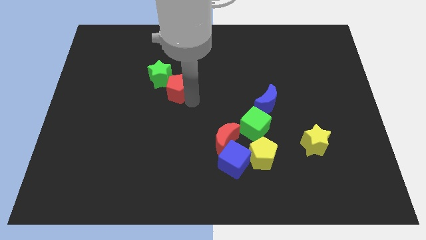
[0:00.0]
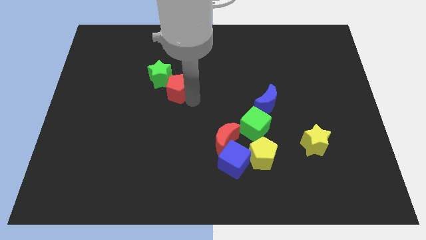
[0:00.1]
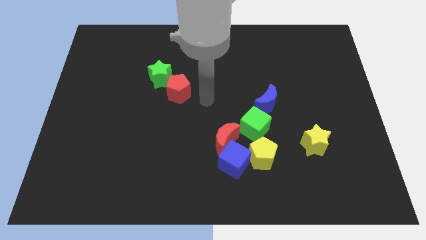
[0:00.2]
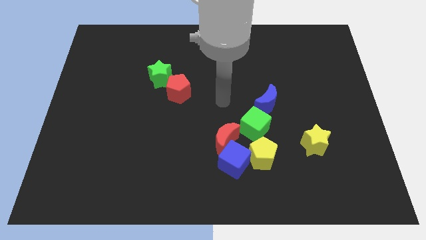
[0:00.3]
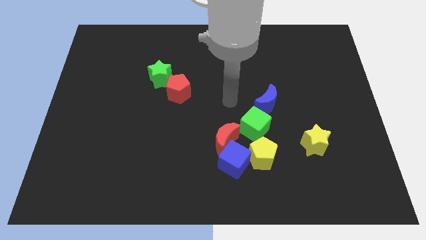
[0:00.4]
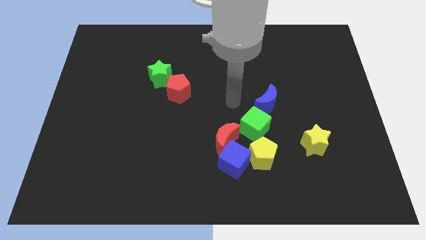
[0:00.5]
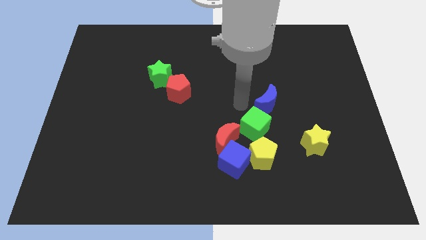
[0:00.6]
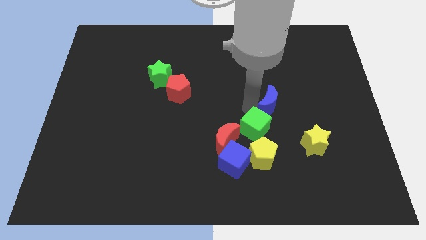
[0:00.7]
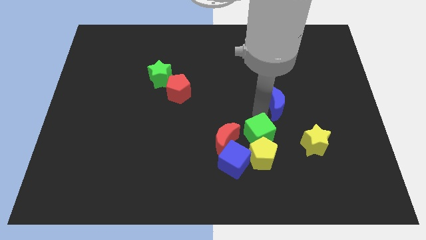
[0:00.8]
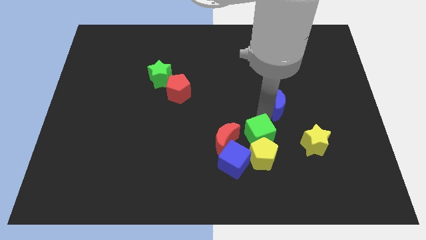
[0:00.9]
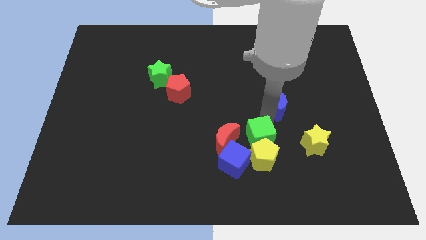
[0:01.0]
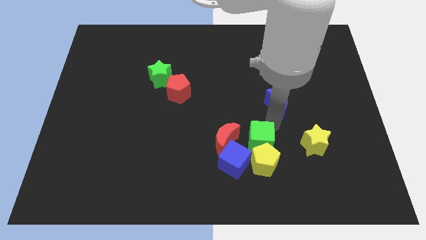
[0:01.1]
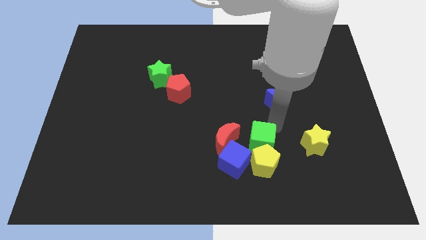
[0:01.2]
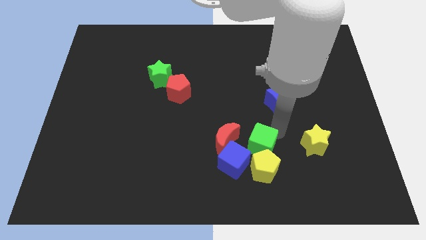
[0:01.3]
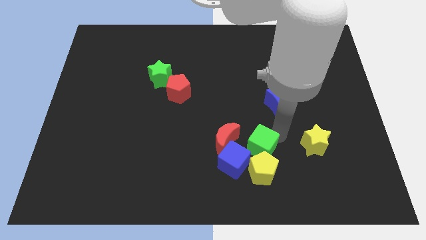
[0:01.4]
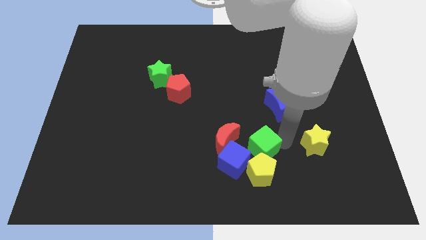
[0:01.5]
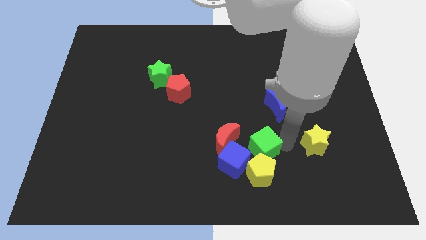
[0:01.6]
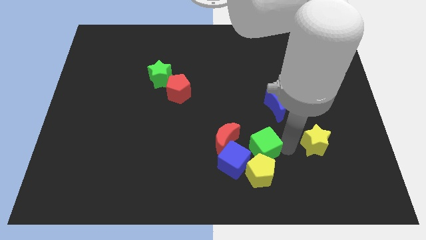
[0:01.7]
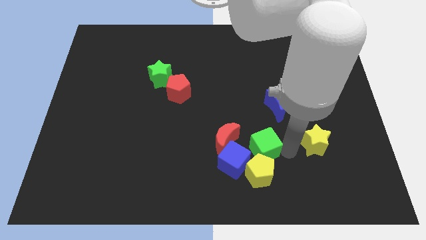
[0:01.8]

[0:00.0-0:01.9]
push the green cube slightly to the bottom

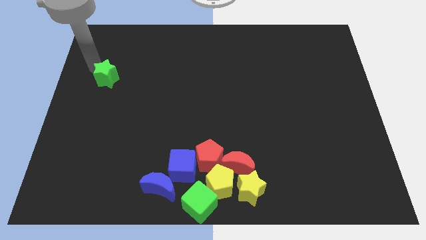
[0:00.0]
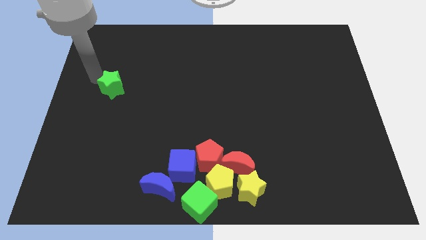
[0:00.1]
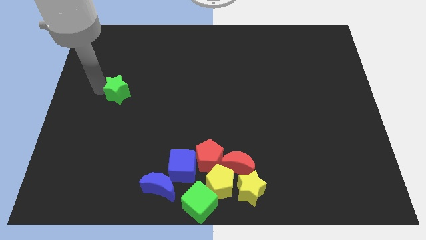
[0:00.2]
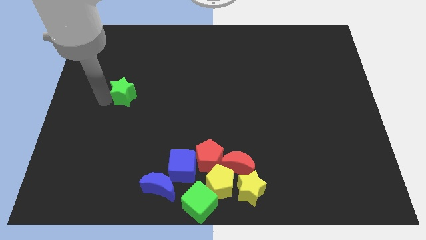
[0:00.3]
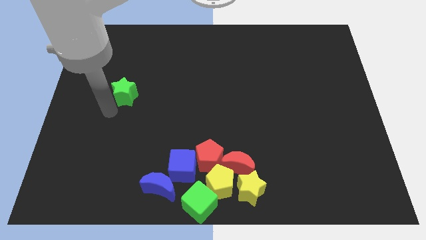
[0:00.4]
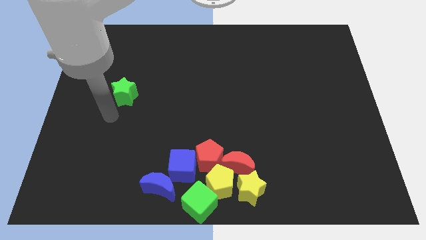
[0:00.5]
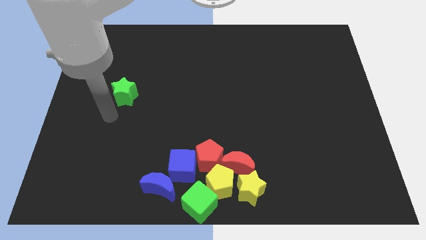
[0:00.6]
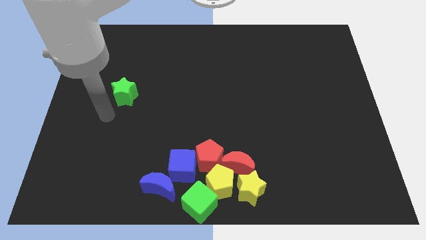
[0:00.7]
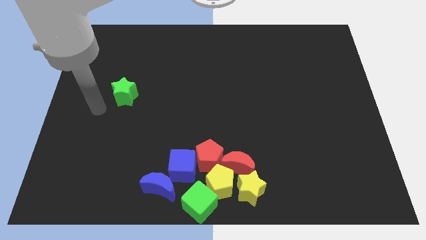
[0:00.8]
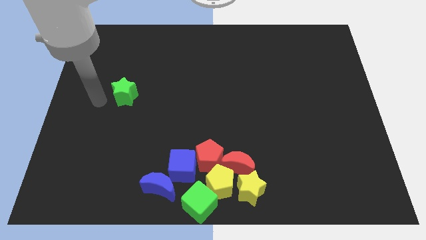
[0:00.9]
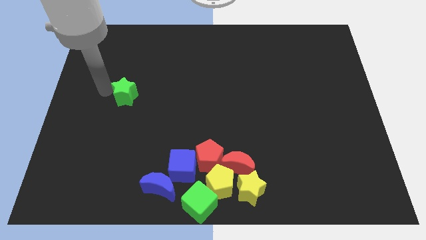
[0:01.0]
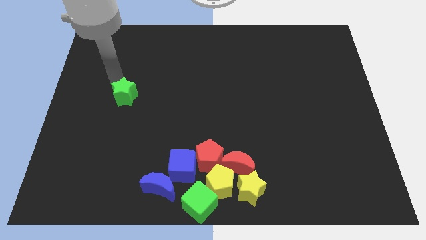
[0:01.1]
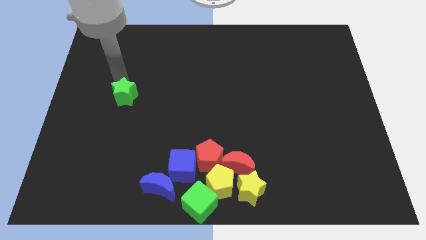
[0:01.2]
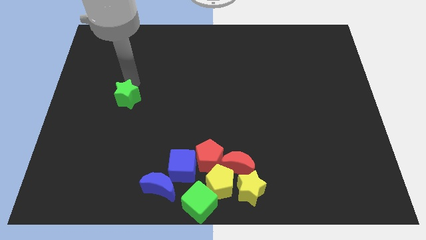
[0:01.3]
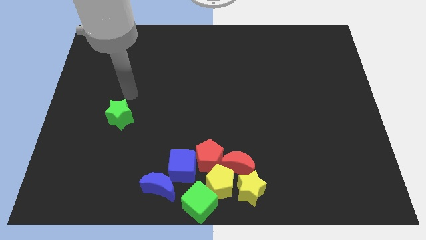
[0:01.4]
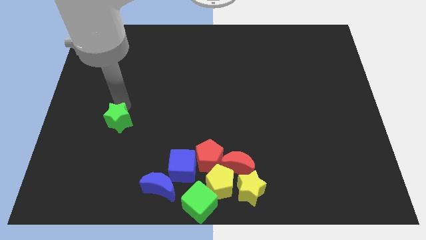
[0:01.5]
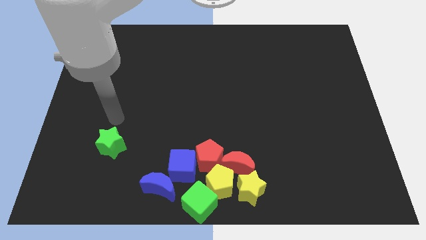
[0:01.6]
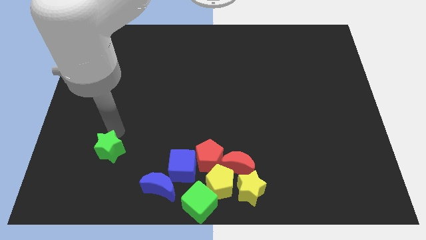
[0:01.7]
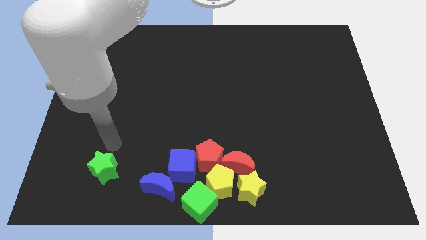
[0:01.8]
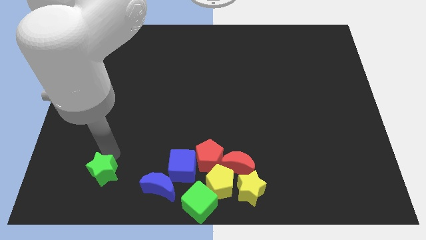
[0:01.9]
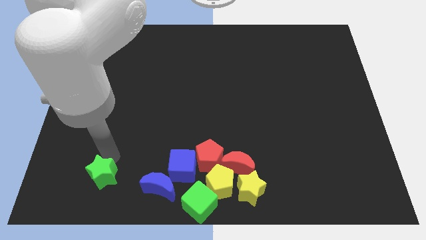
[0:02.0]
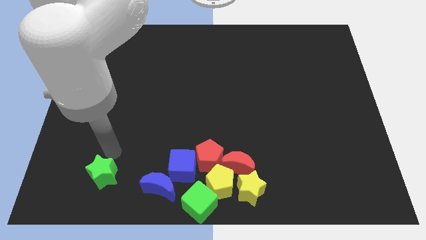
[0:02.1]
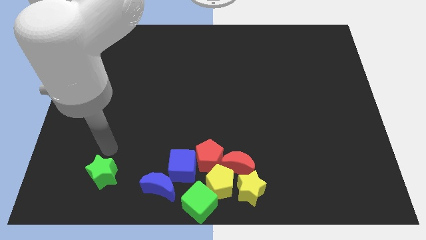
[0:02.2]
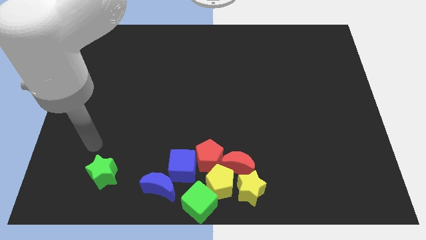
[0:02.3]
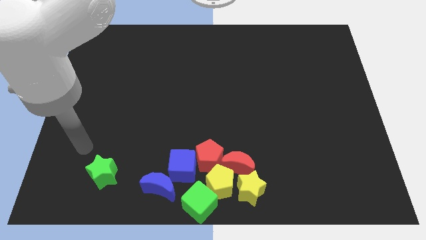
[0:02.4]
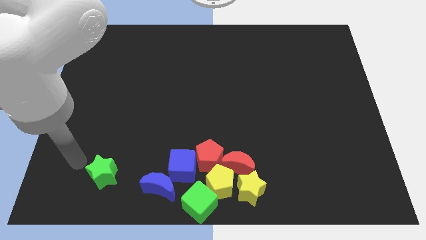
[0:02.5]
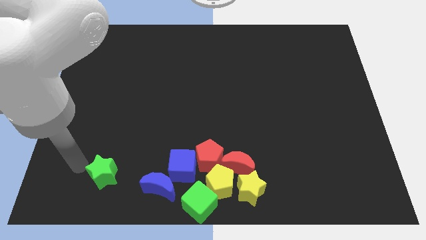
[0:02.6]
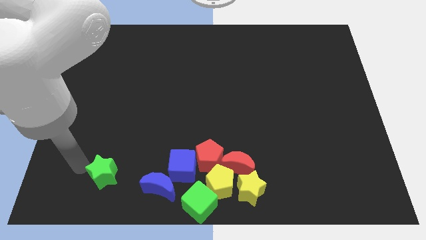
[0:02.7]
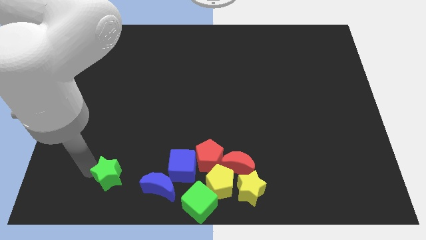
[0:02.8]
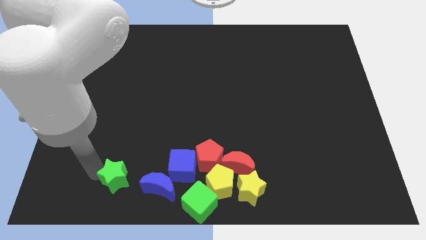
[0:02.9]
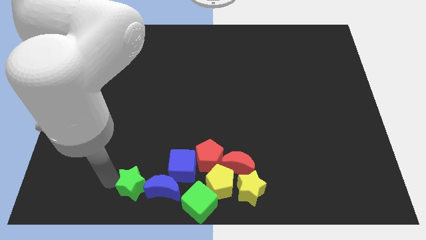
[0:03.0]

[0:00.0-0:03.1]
move the green star on the left of the blue crescent

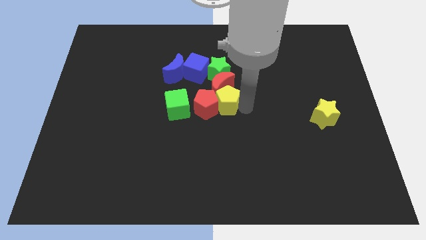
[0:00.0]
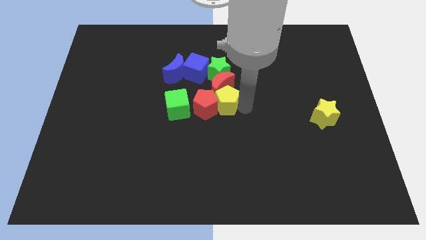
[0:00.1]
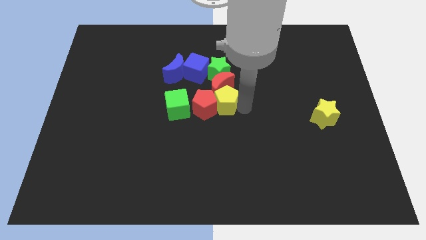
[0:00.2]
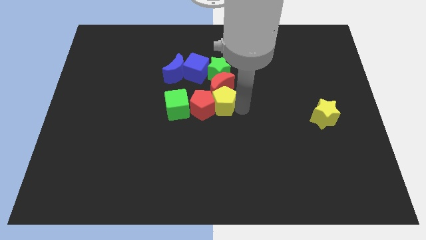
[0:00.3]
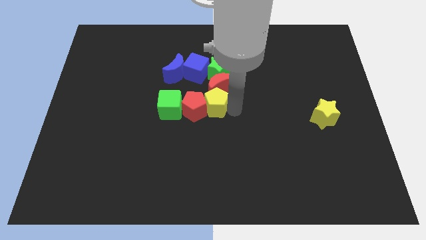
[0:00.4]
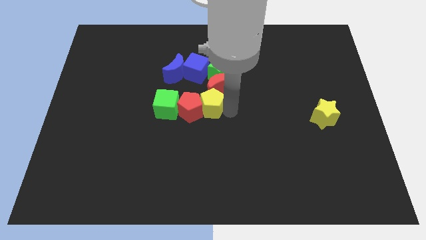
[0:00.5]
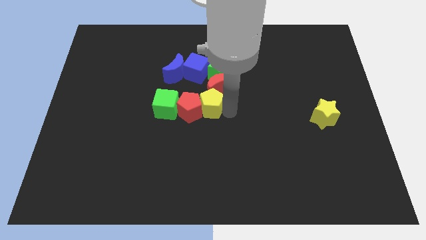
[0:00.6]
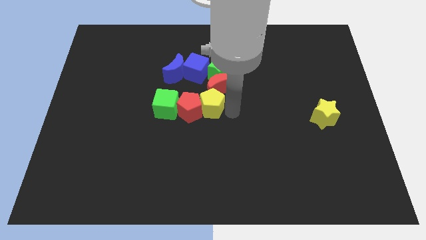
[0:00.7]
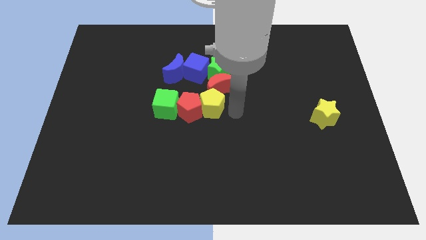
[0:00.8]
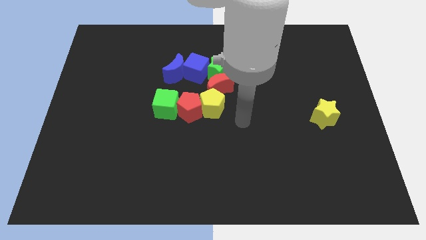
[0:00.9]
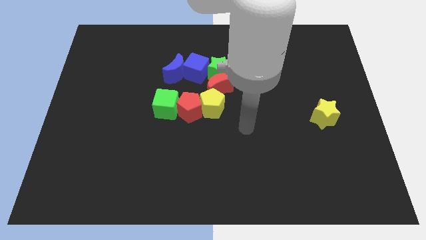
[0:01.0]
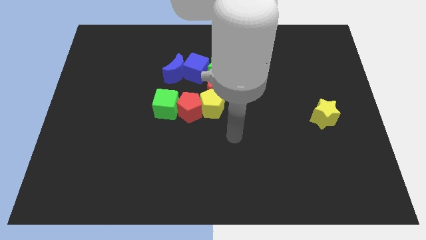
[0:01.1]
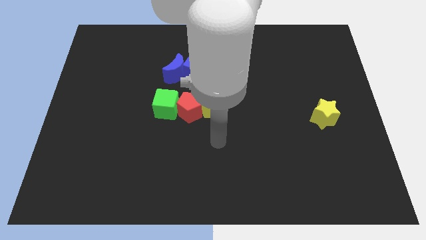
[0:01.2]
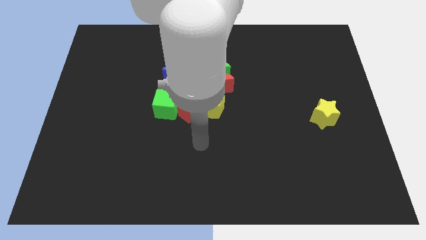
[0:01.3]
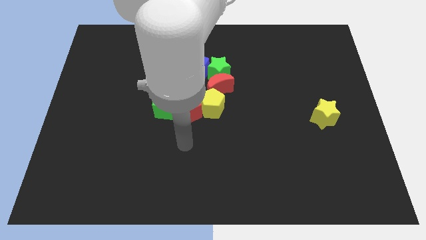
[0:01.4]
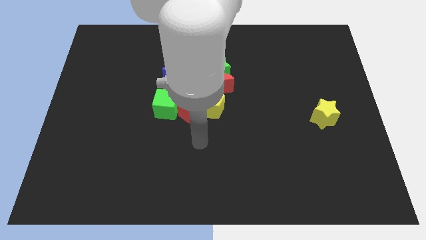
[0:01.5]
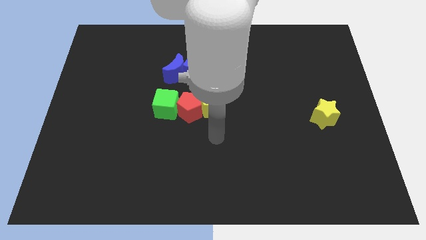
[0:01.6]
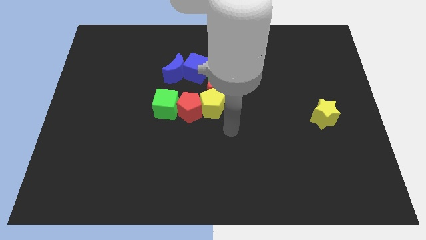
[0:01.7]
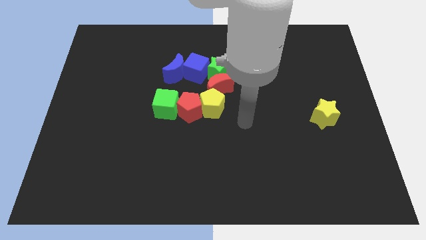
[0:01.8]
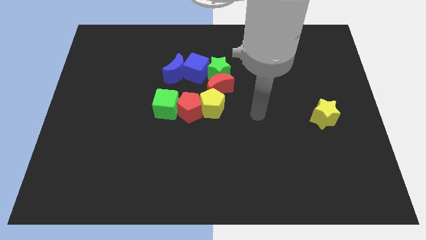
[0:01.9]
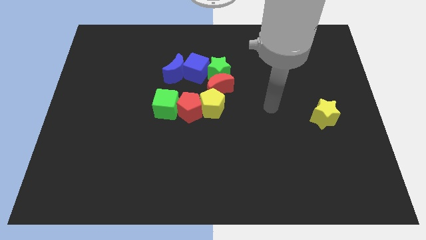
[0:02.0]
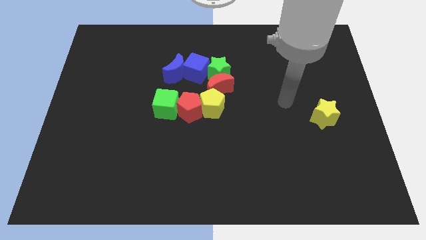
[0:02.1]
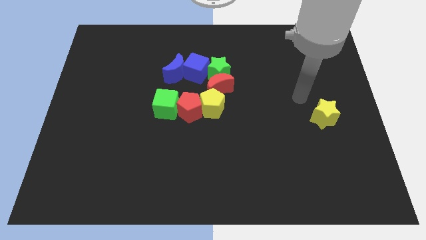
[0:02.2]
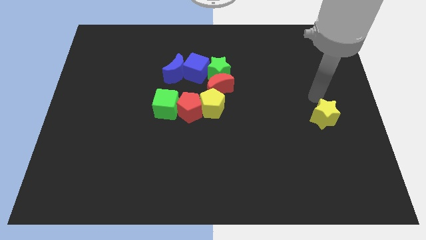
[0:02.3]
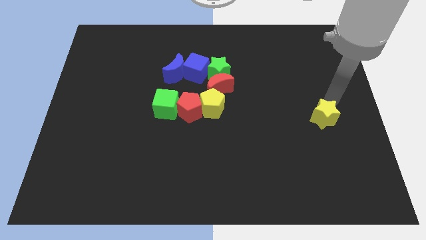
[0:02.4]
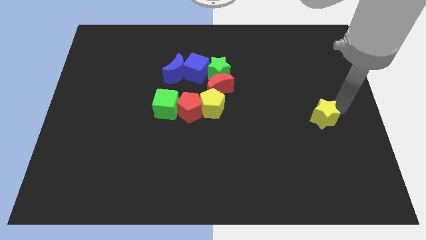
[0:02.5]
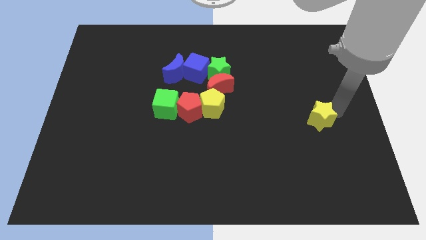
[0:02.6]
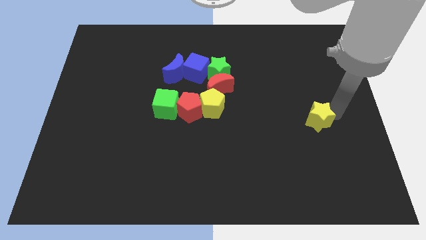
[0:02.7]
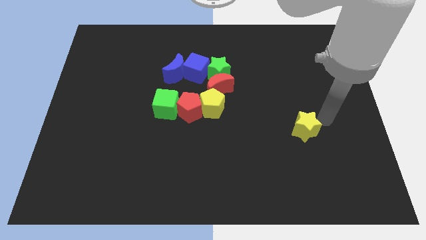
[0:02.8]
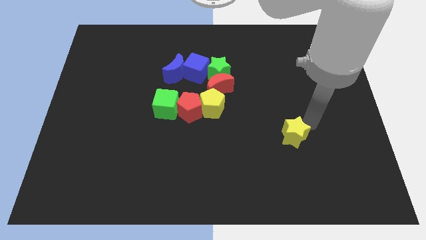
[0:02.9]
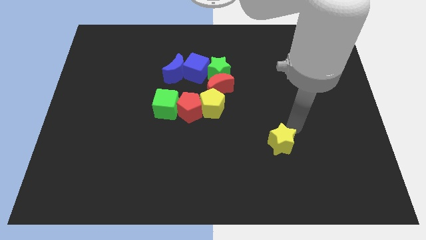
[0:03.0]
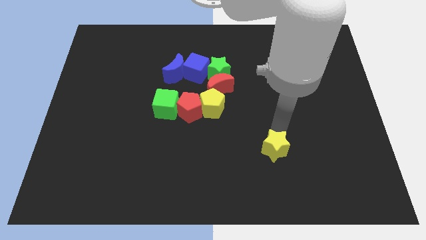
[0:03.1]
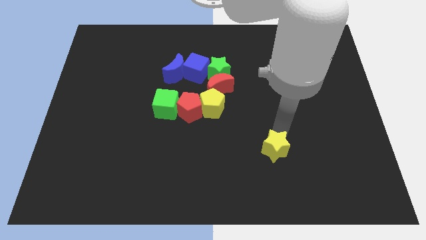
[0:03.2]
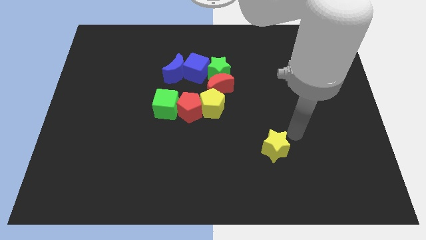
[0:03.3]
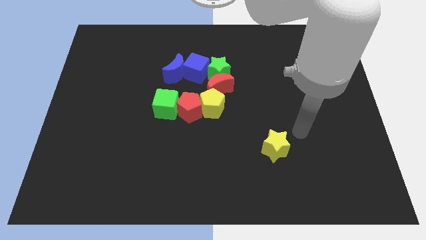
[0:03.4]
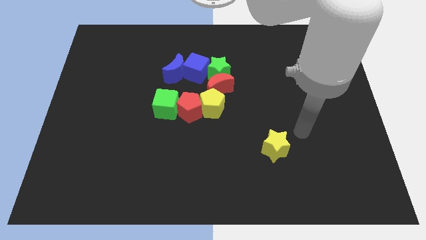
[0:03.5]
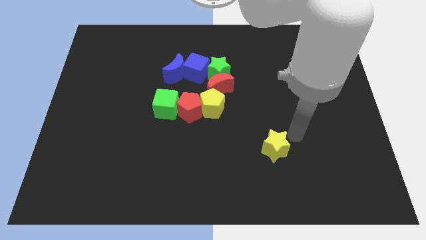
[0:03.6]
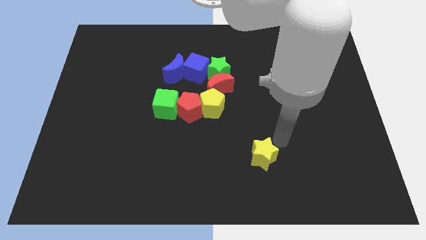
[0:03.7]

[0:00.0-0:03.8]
push the yellow star to the bottom side

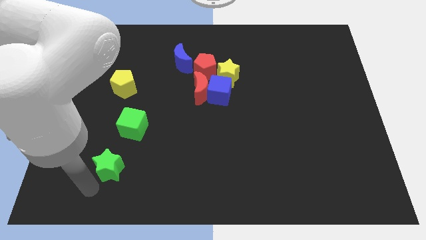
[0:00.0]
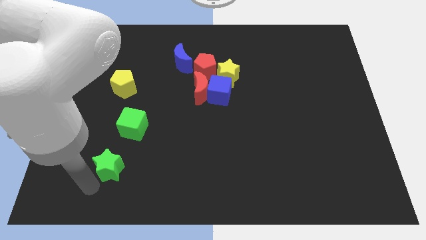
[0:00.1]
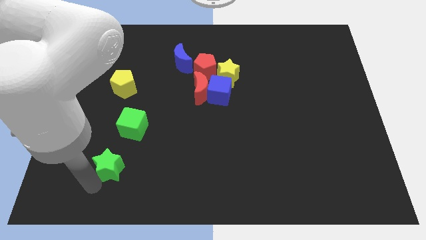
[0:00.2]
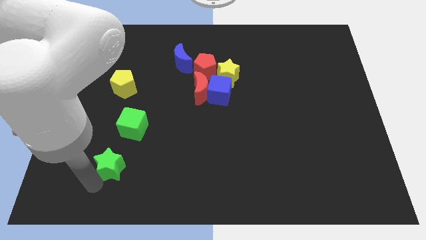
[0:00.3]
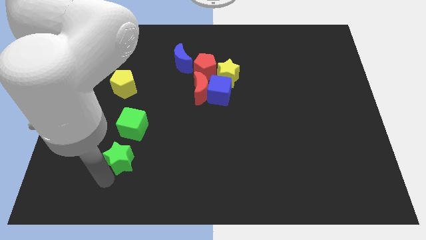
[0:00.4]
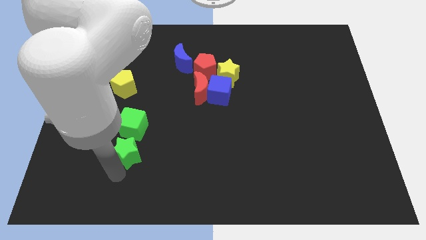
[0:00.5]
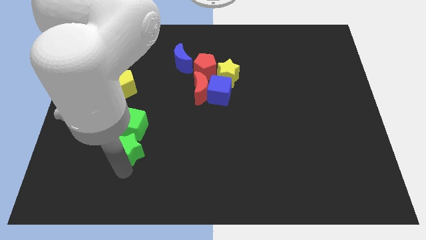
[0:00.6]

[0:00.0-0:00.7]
move the green star below the green cube
